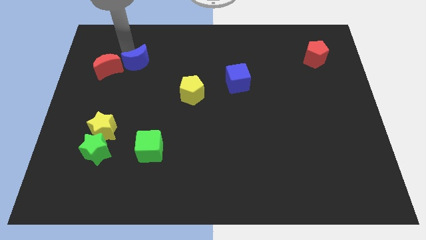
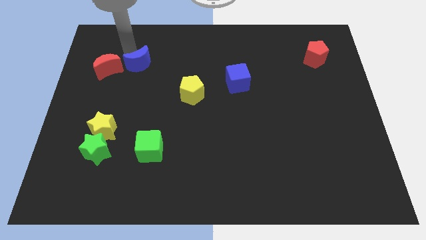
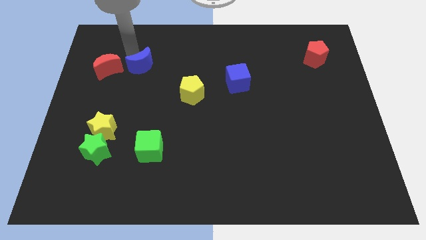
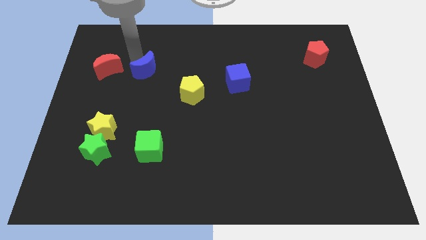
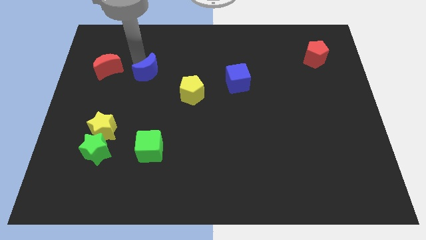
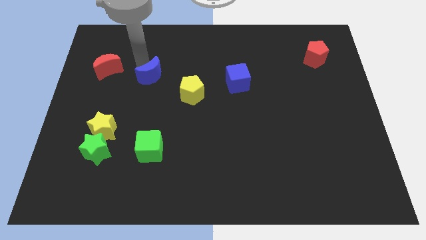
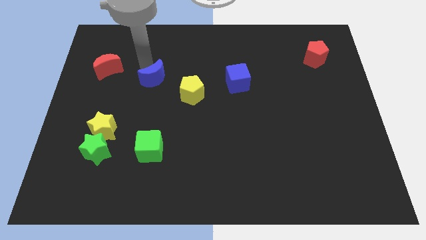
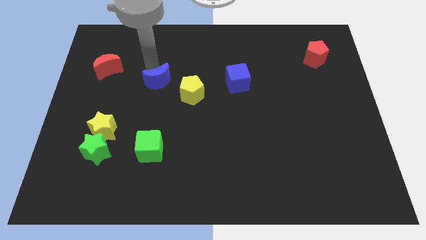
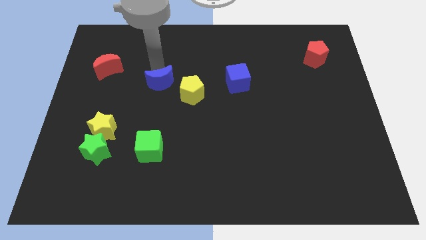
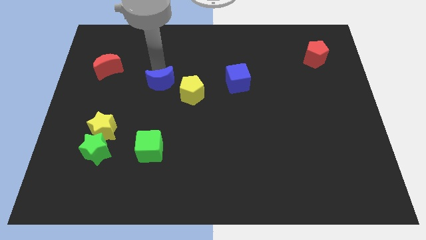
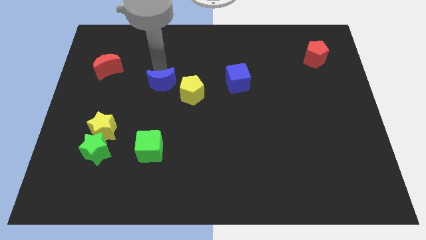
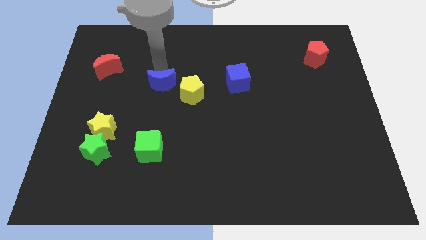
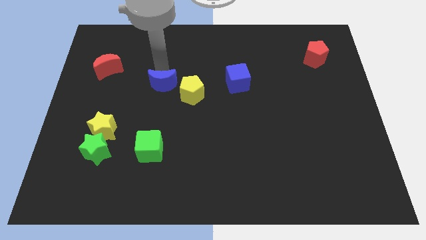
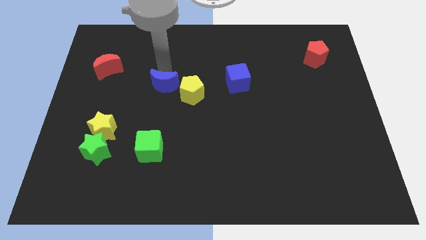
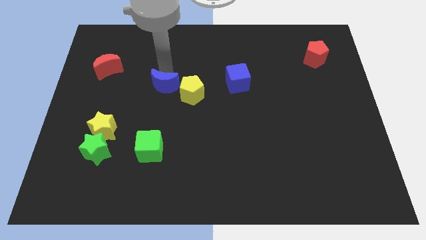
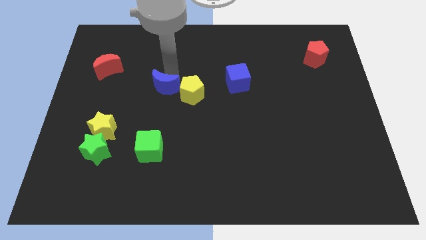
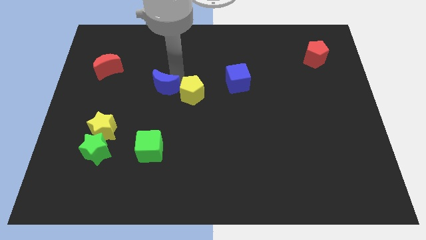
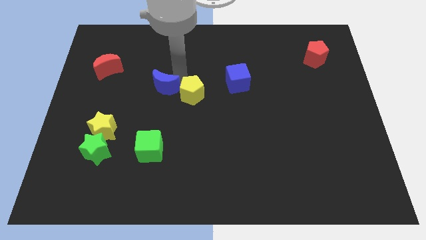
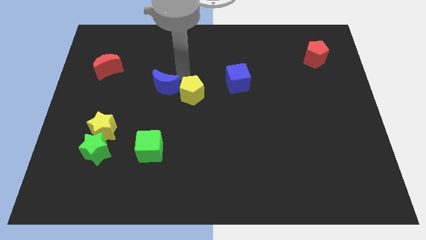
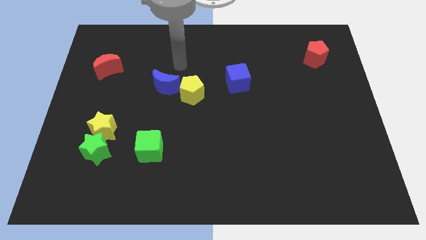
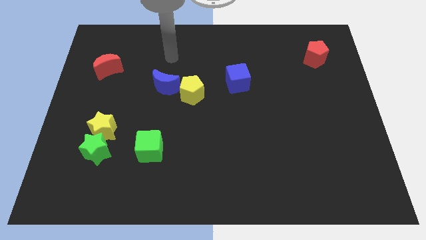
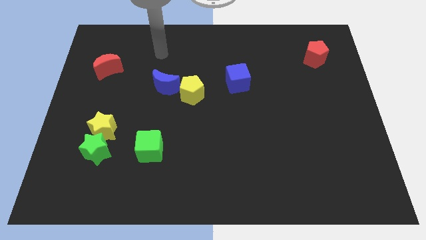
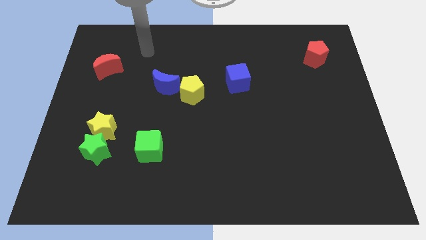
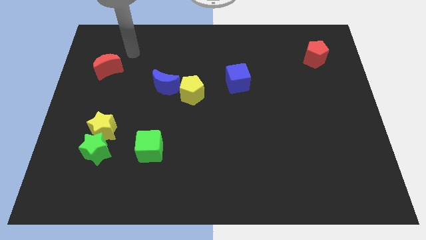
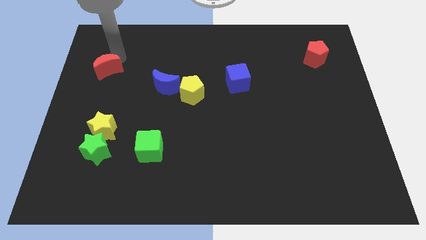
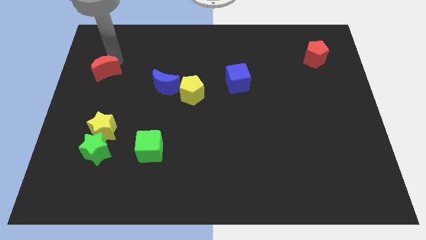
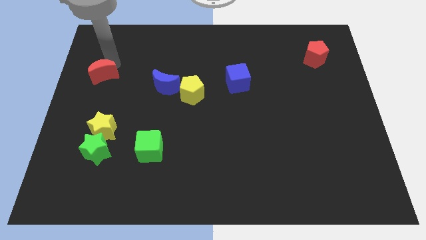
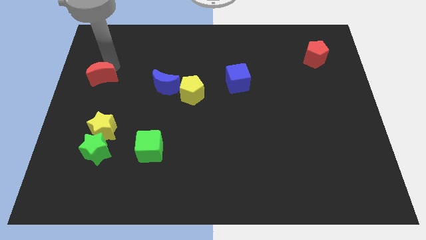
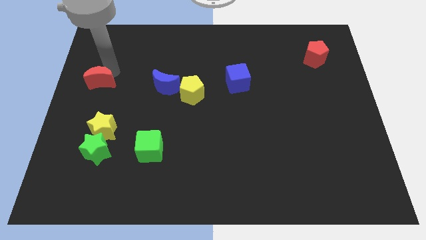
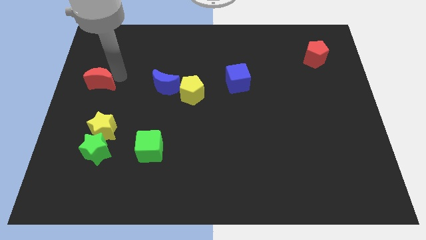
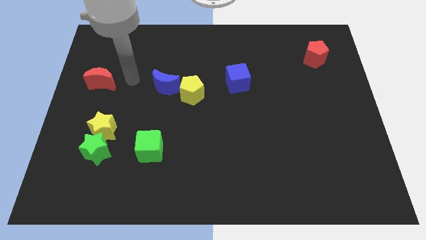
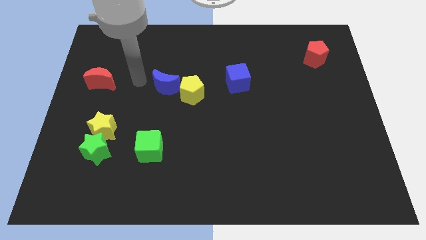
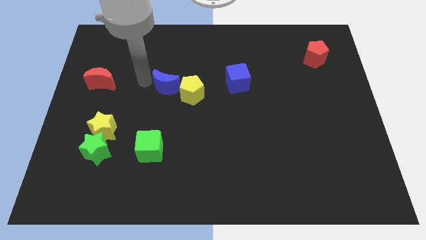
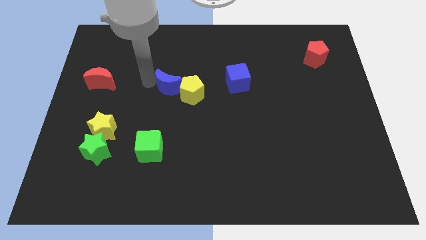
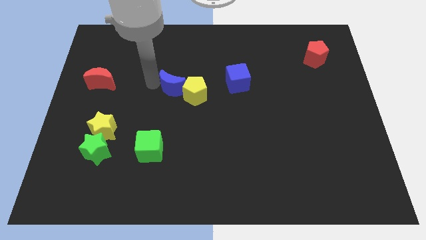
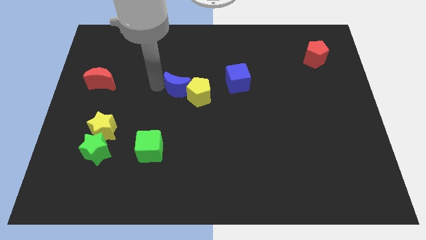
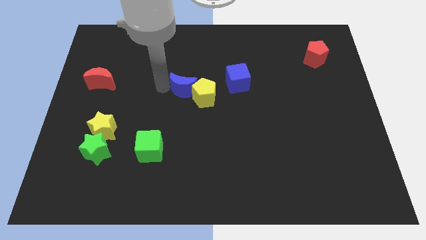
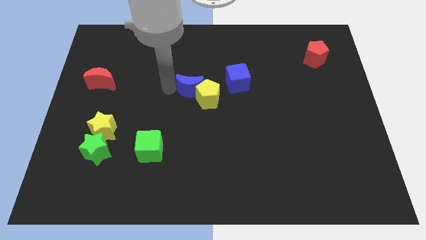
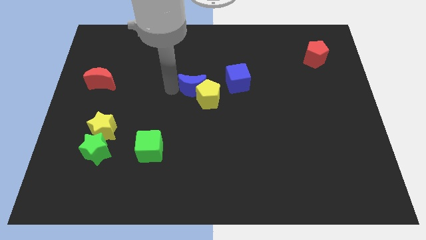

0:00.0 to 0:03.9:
push the blue moon left to the pentagon

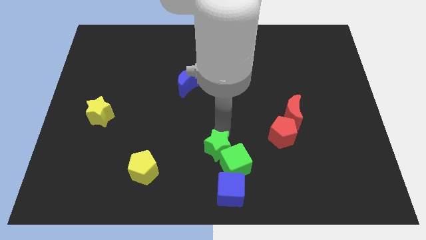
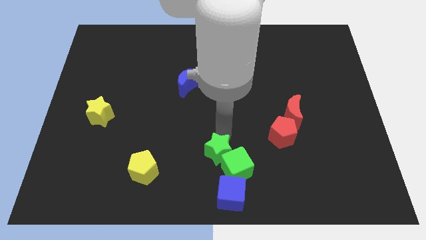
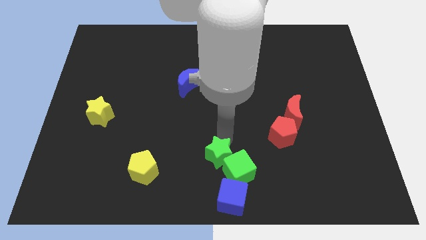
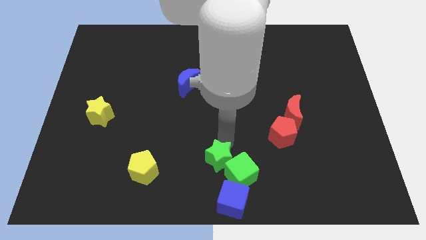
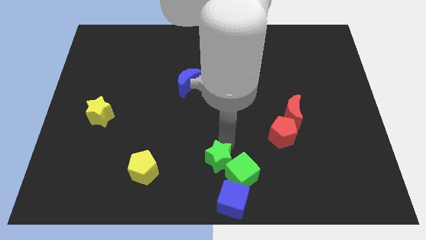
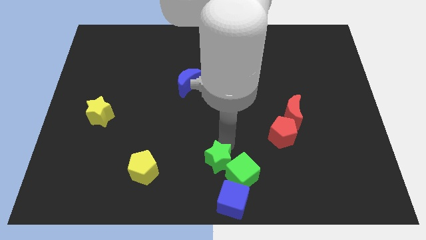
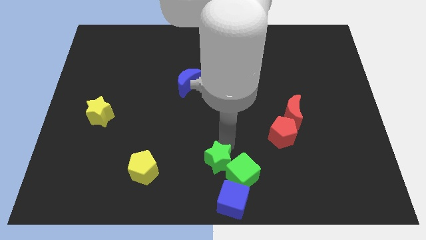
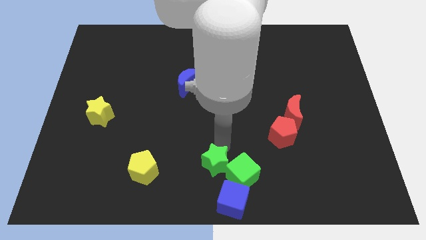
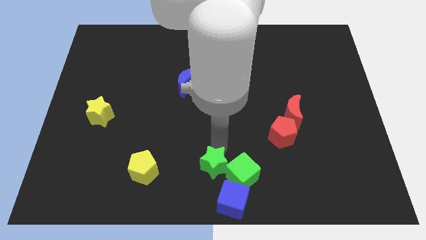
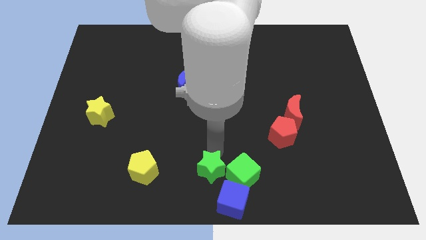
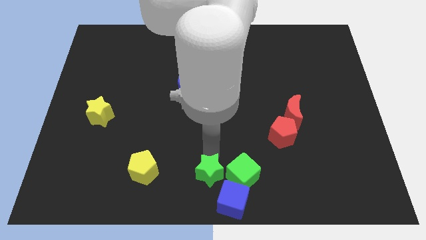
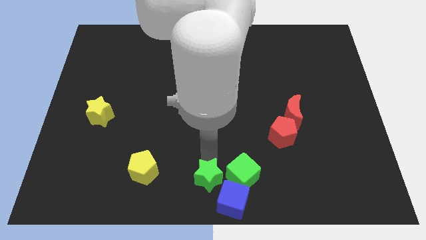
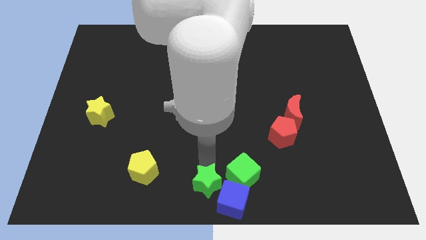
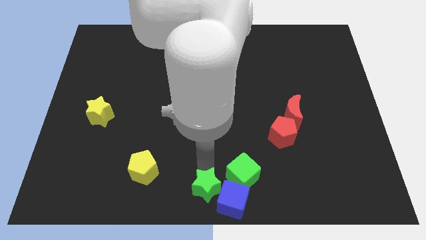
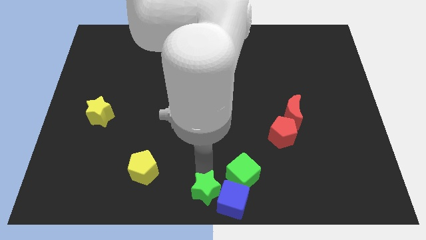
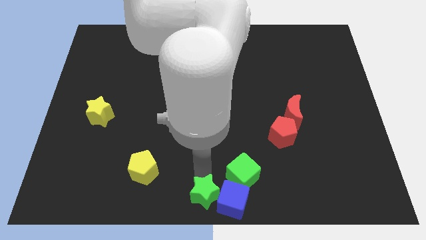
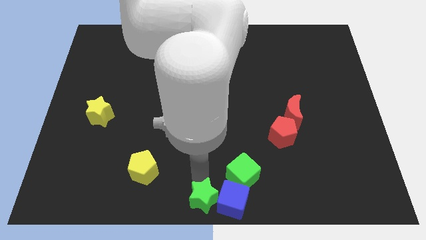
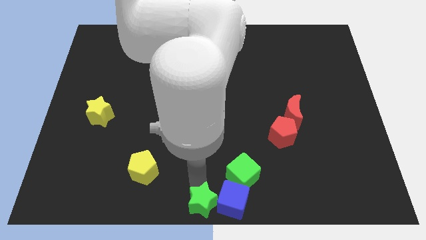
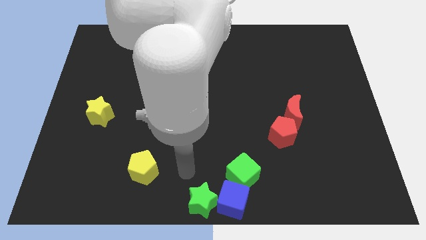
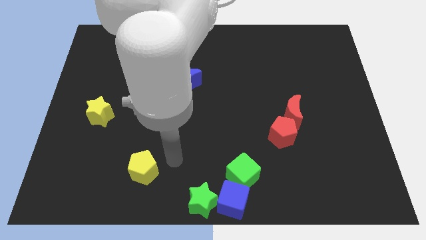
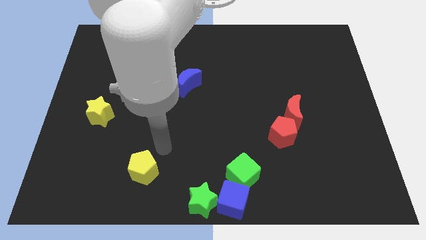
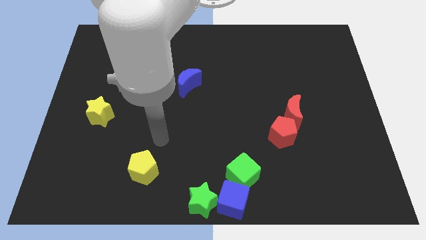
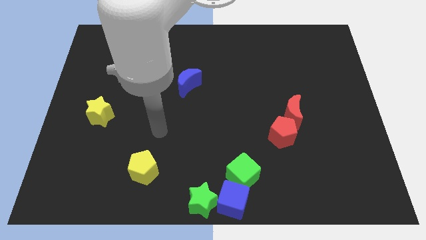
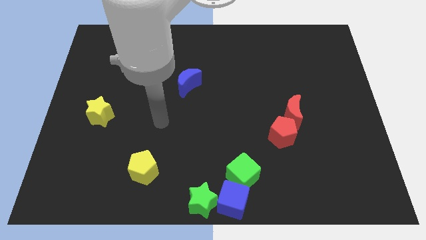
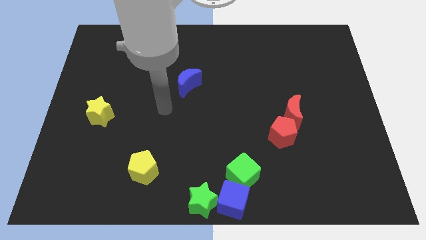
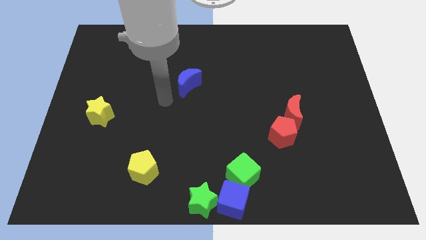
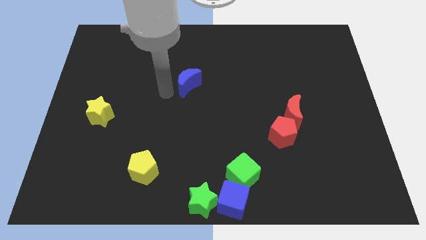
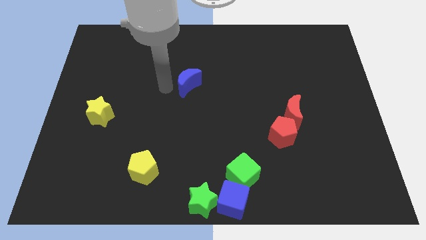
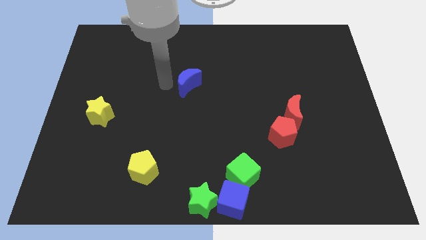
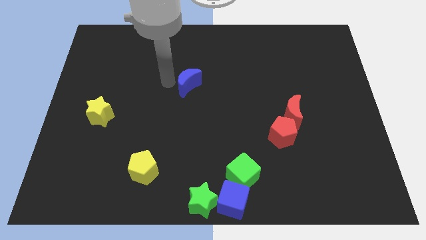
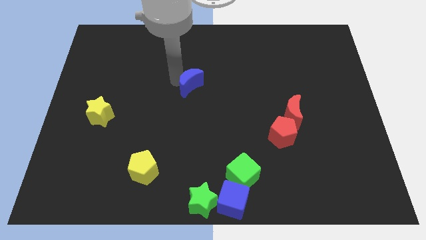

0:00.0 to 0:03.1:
place the green star to the left side of the blue cube

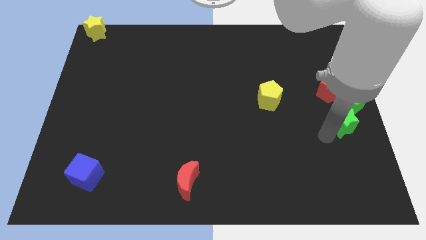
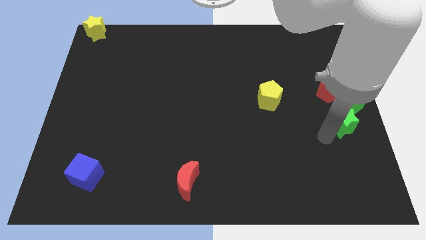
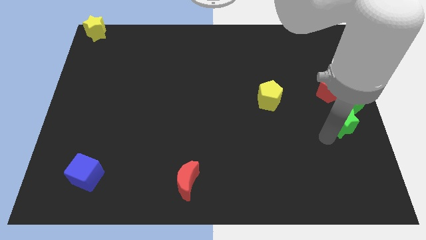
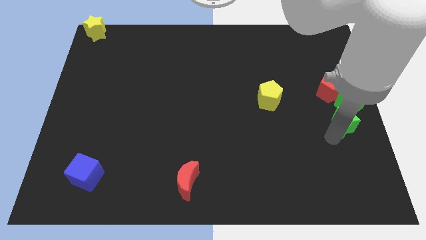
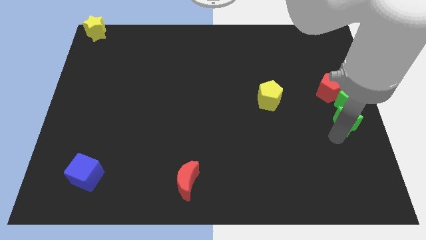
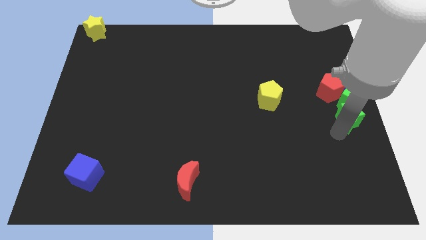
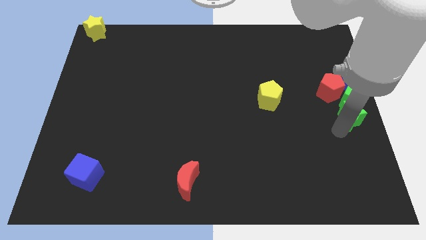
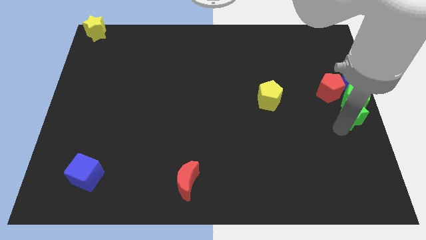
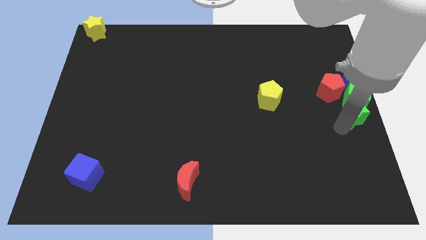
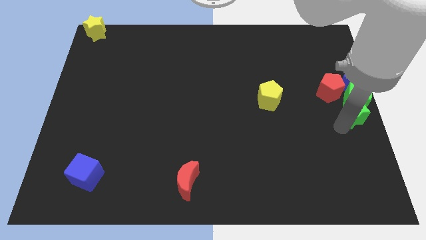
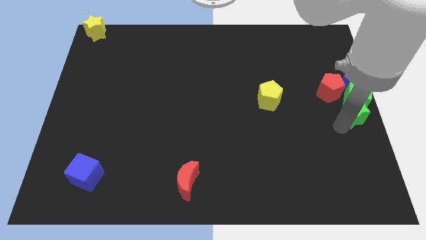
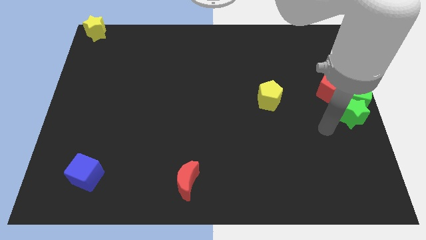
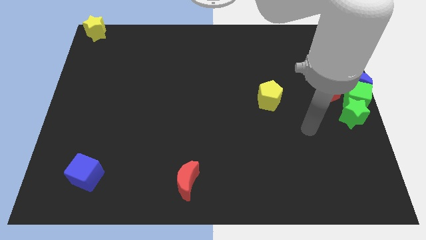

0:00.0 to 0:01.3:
push the green star into green cube

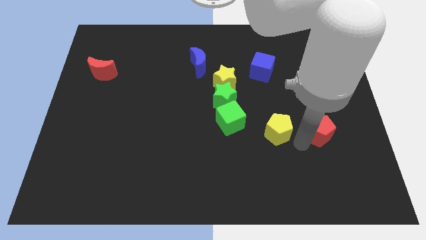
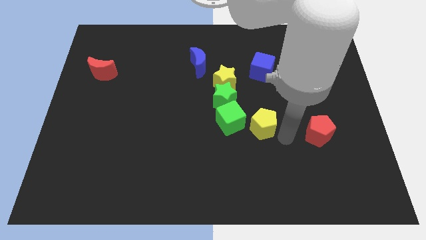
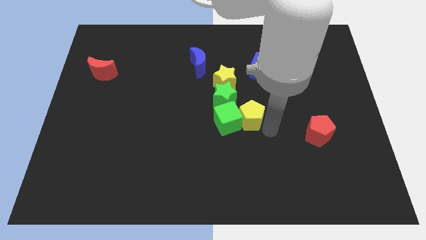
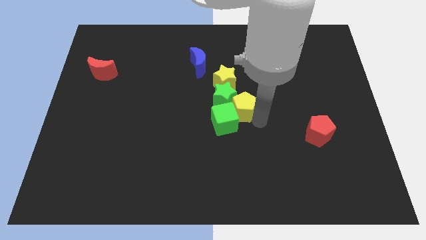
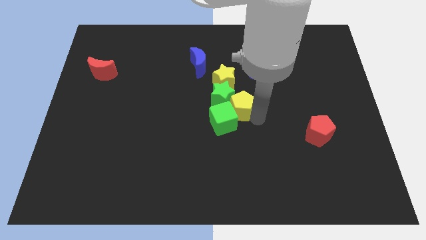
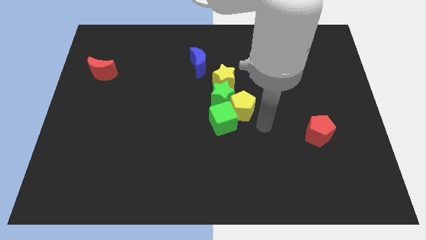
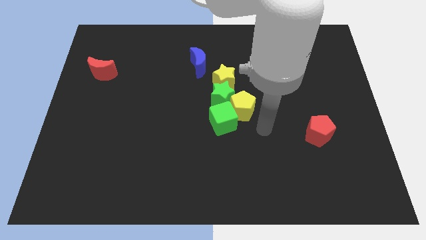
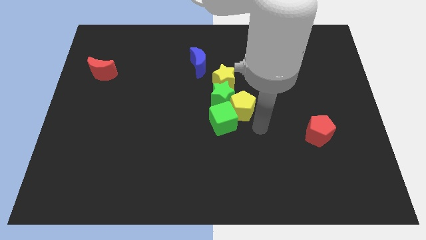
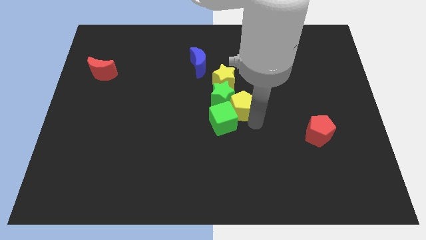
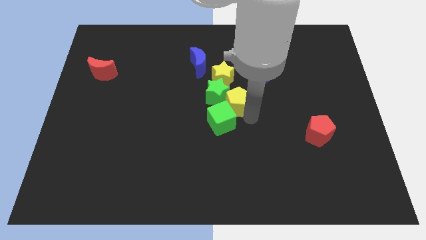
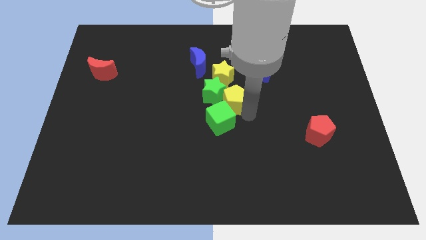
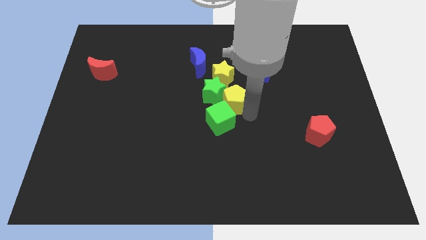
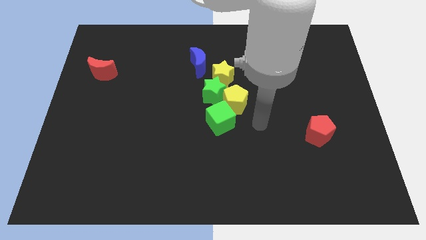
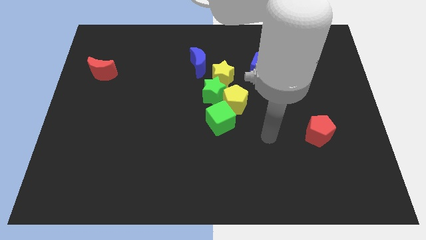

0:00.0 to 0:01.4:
push the yellow pentagon into a group of green blocks and the yellow star
